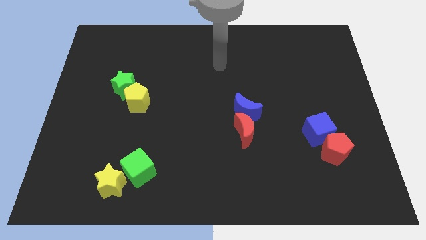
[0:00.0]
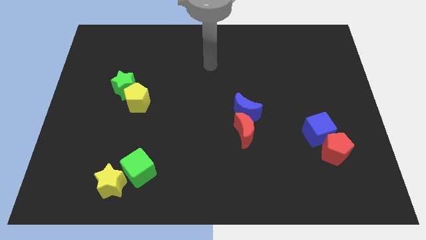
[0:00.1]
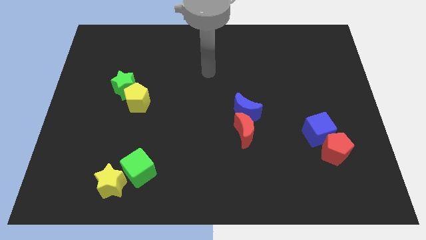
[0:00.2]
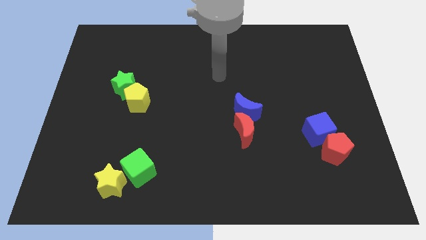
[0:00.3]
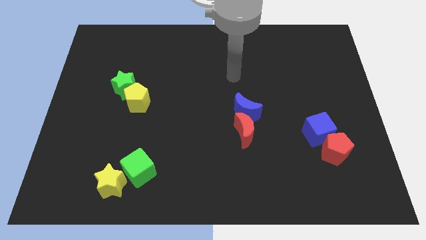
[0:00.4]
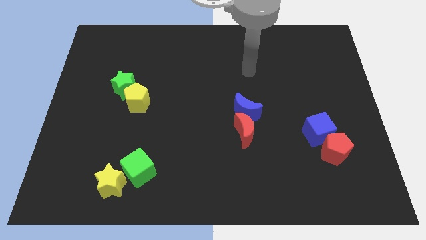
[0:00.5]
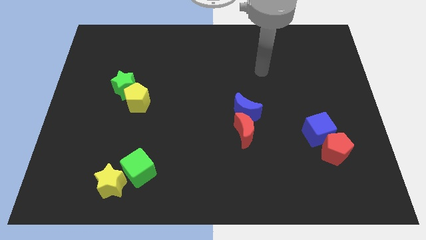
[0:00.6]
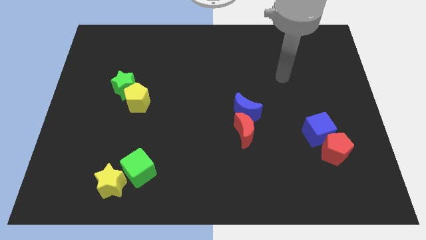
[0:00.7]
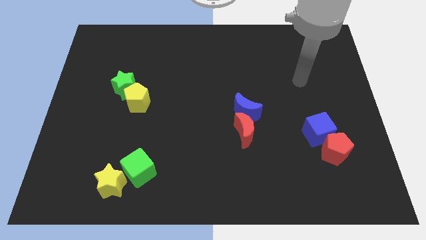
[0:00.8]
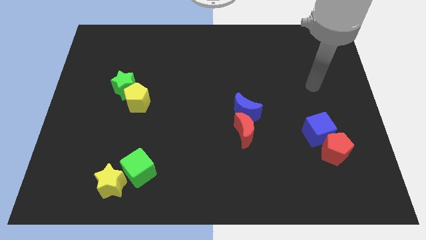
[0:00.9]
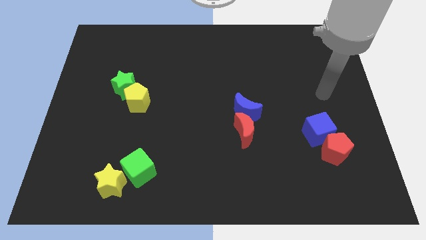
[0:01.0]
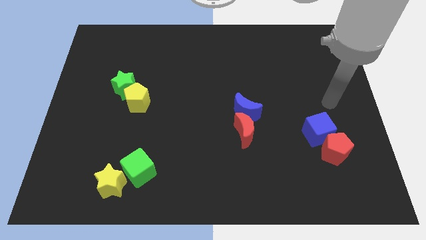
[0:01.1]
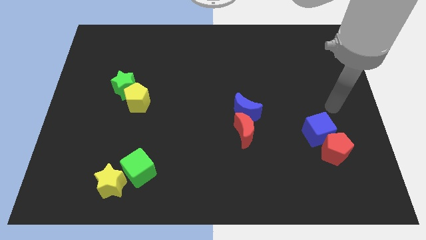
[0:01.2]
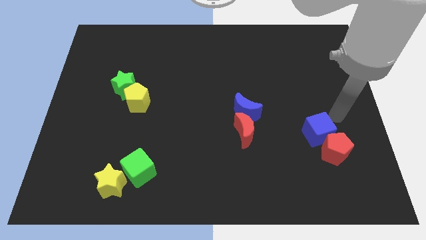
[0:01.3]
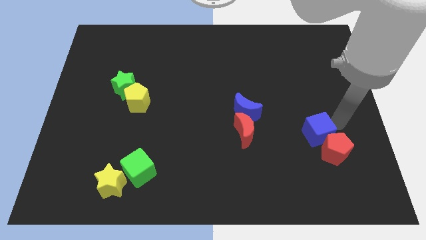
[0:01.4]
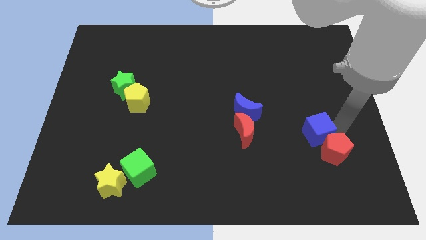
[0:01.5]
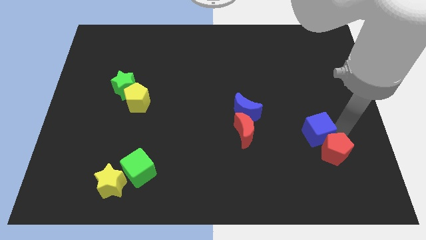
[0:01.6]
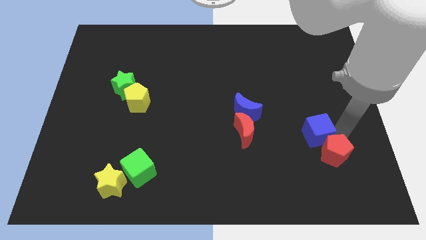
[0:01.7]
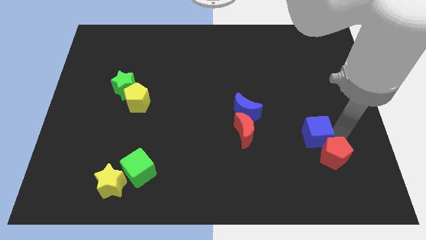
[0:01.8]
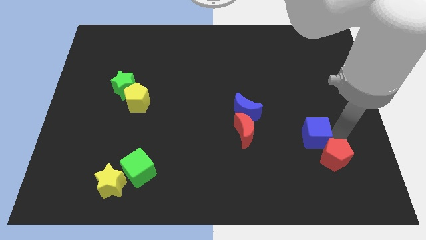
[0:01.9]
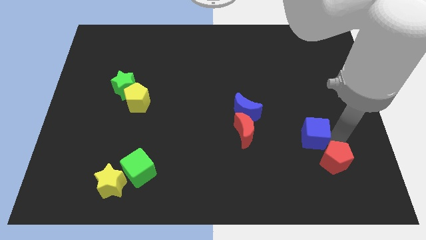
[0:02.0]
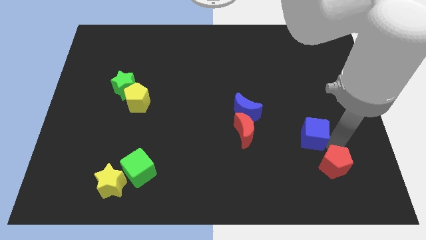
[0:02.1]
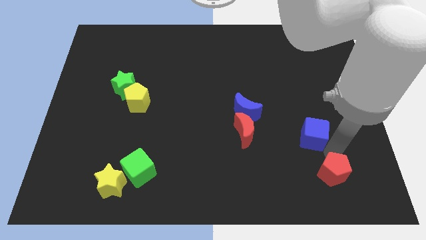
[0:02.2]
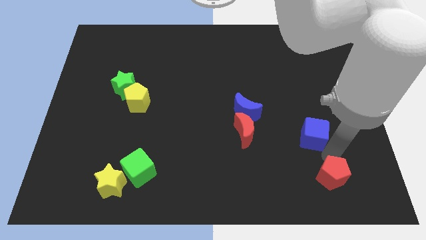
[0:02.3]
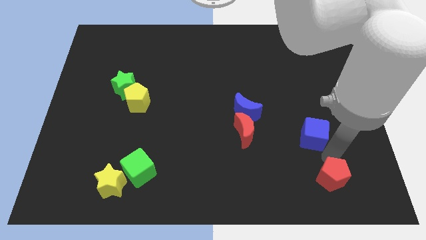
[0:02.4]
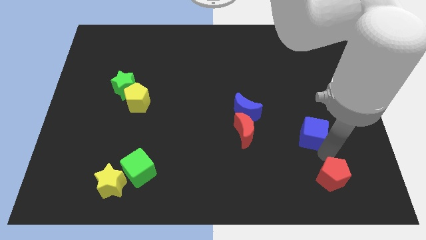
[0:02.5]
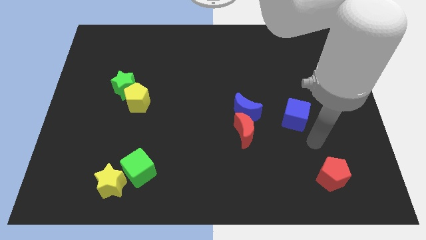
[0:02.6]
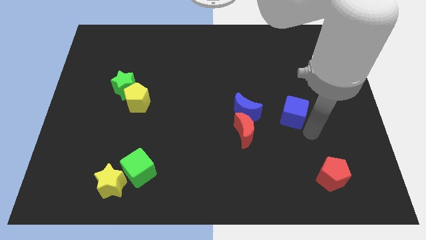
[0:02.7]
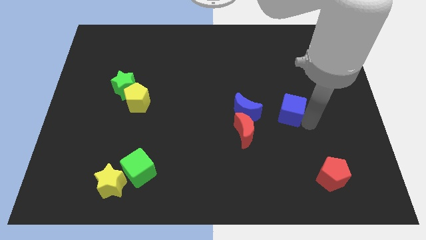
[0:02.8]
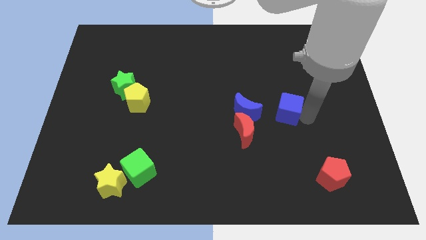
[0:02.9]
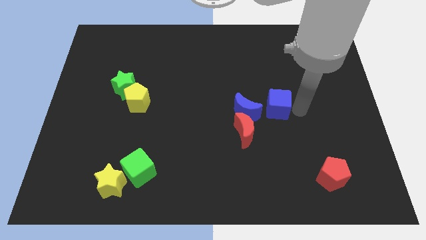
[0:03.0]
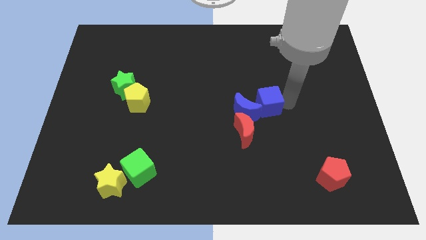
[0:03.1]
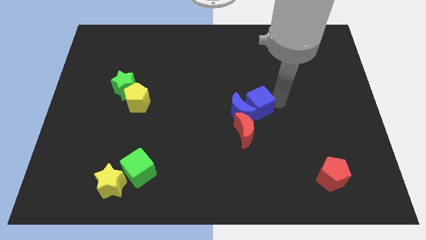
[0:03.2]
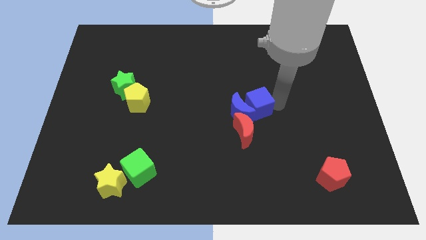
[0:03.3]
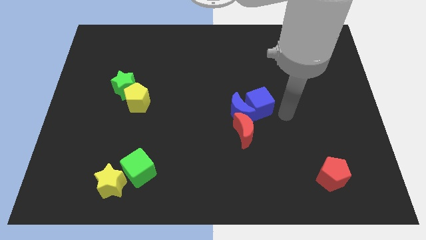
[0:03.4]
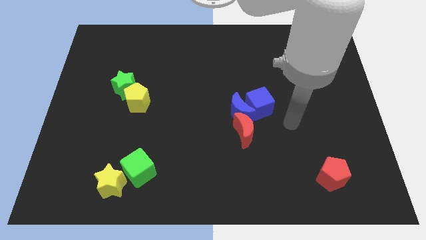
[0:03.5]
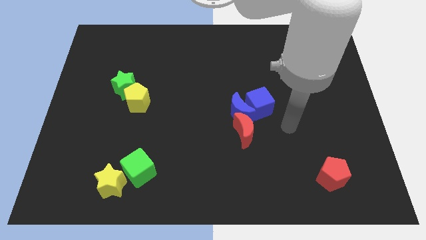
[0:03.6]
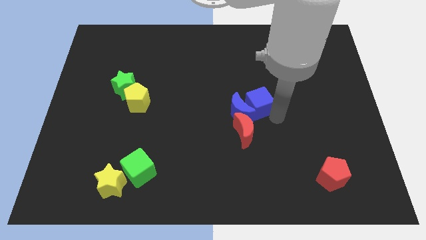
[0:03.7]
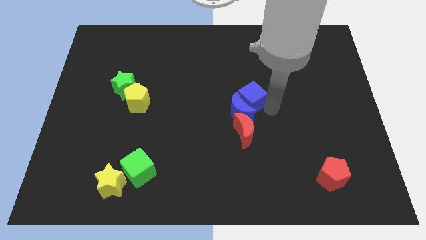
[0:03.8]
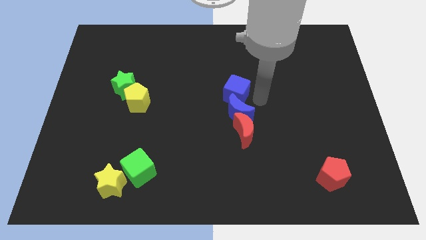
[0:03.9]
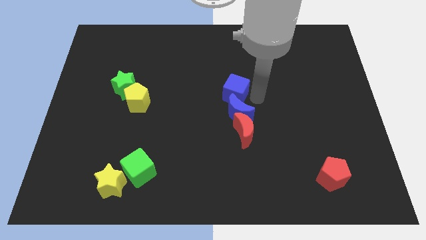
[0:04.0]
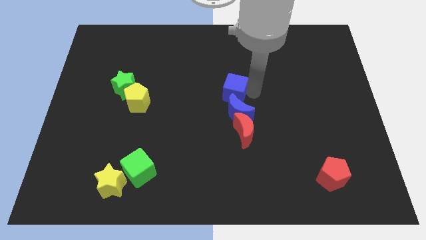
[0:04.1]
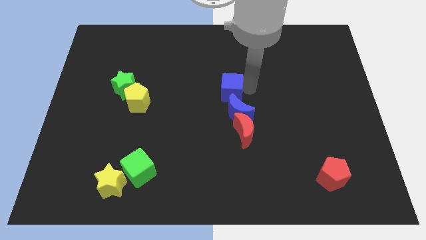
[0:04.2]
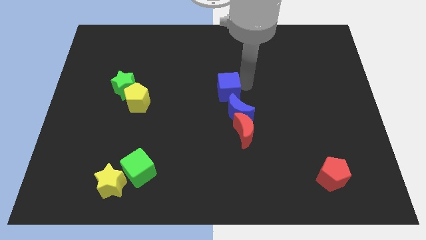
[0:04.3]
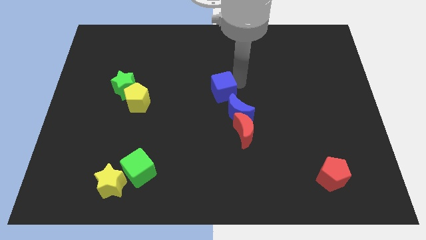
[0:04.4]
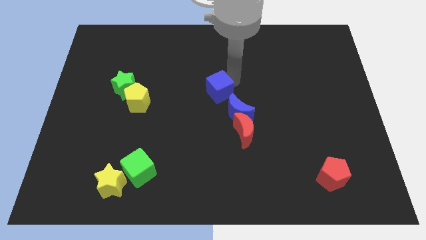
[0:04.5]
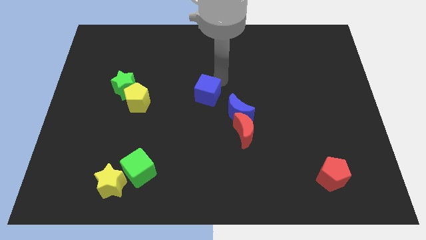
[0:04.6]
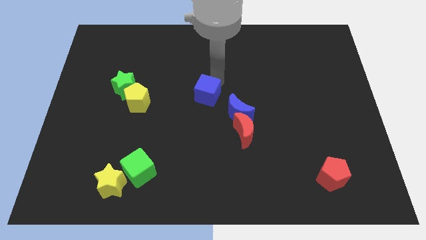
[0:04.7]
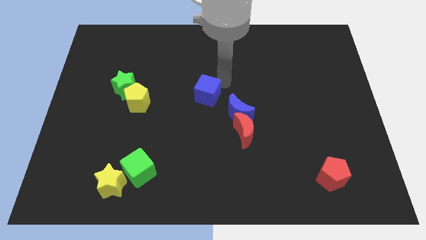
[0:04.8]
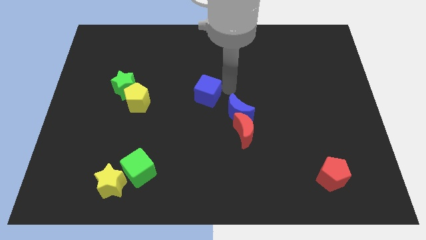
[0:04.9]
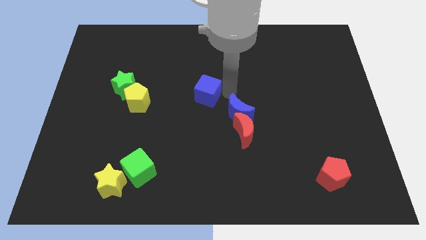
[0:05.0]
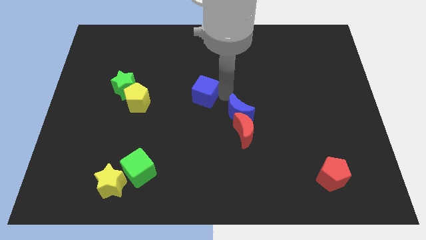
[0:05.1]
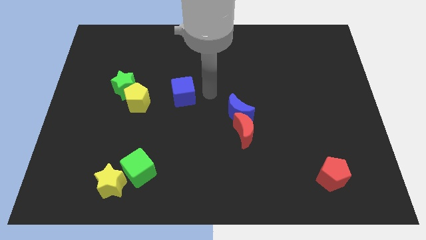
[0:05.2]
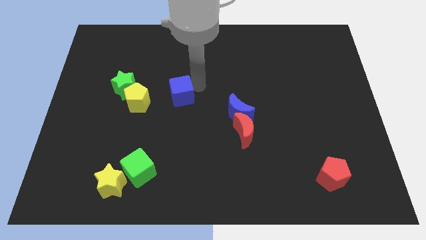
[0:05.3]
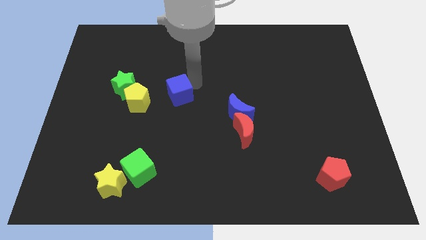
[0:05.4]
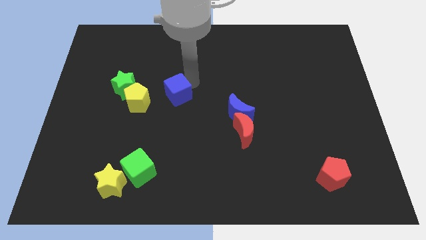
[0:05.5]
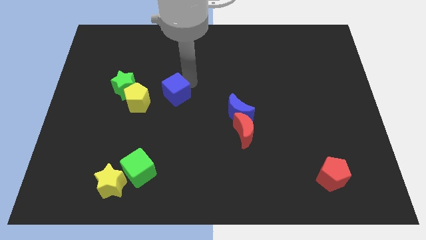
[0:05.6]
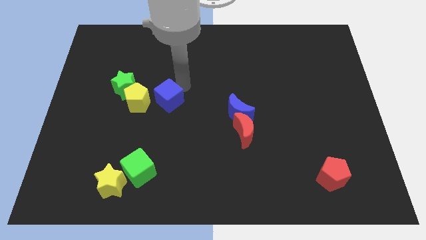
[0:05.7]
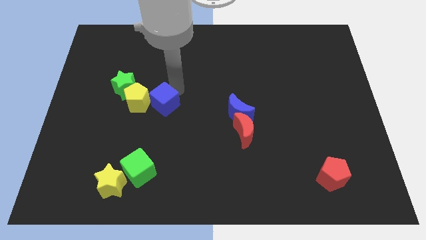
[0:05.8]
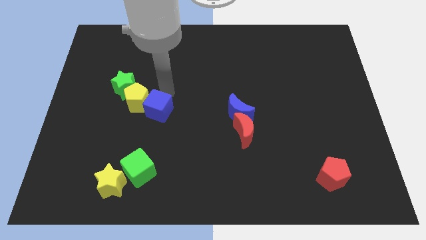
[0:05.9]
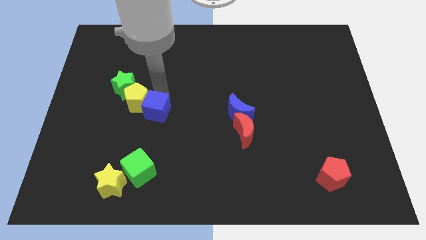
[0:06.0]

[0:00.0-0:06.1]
move the blue cube next to the yellow pentagon

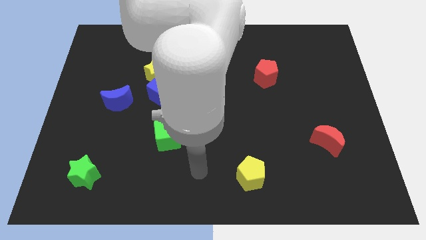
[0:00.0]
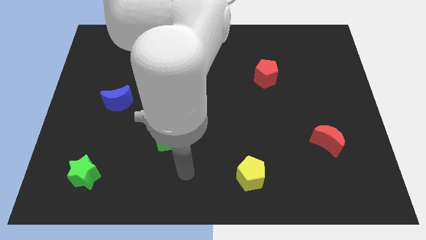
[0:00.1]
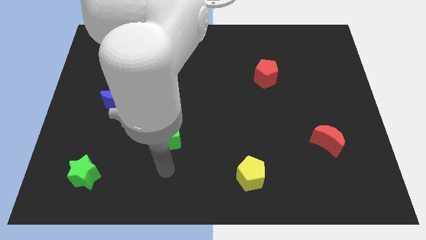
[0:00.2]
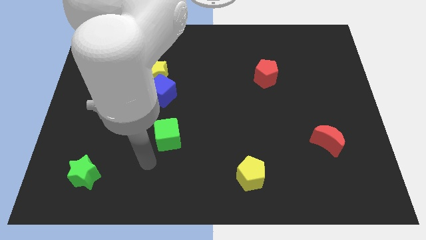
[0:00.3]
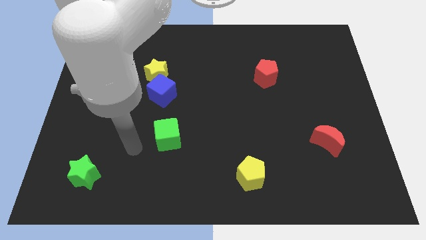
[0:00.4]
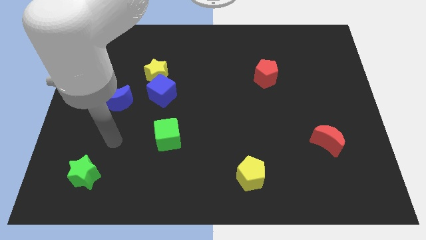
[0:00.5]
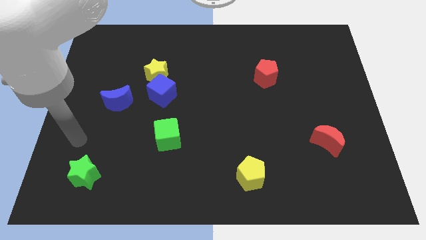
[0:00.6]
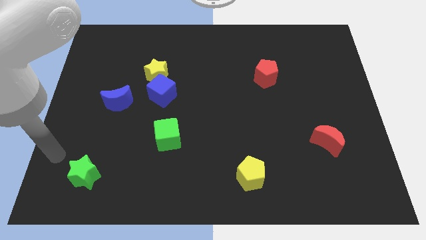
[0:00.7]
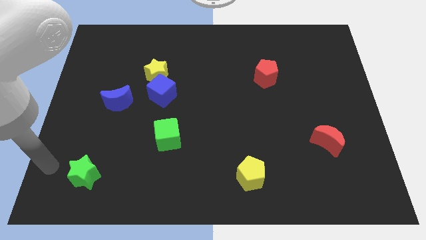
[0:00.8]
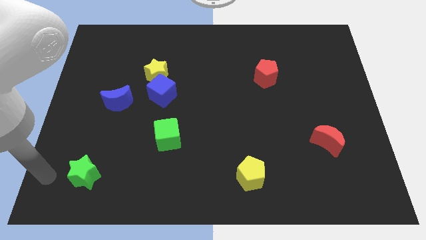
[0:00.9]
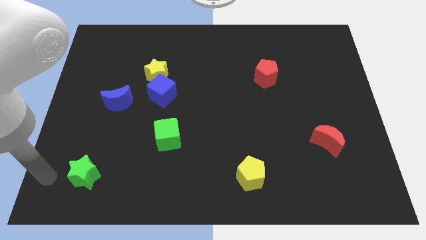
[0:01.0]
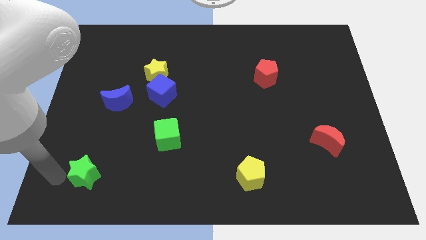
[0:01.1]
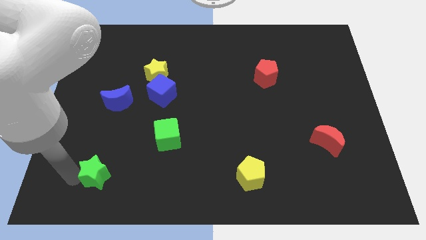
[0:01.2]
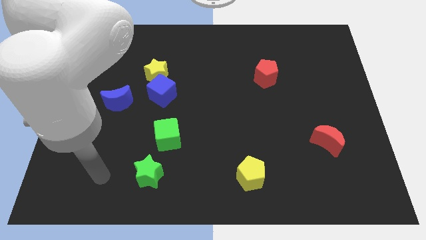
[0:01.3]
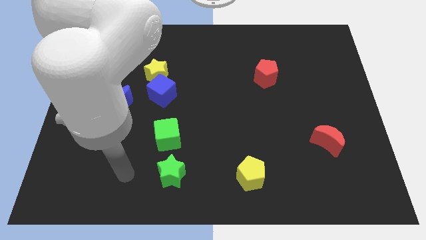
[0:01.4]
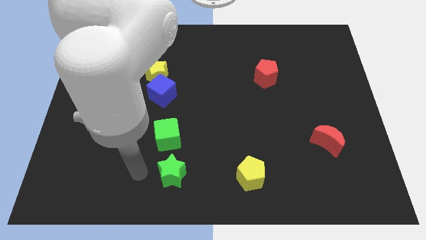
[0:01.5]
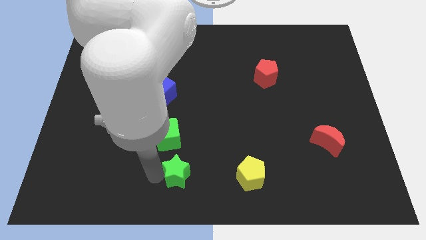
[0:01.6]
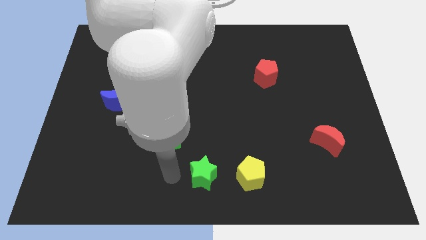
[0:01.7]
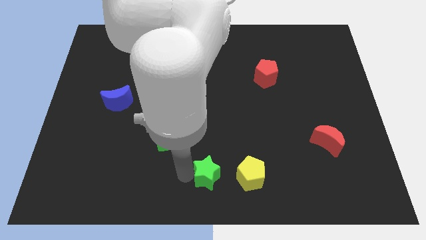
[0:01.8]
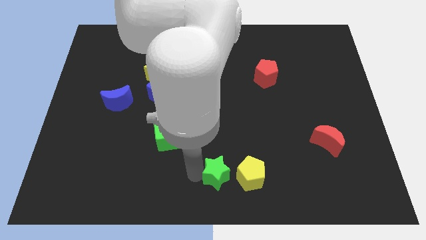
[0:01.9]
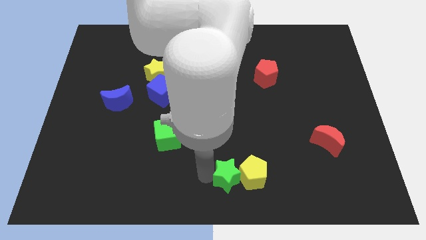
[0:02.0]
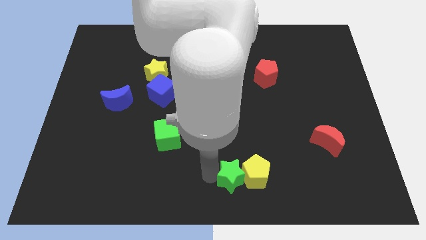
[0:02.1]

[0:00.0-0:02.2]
slide the green star to the yellow pentagon
